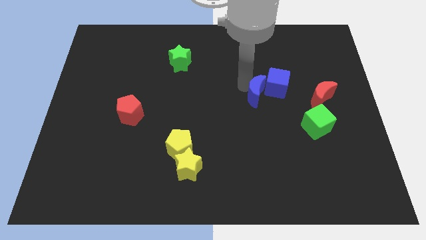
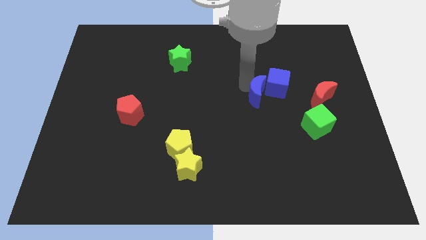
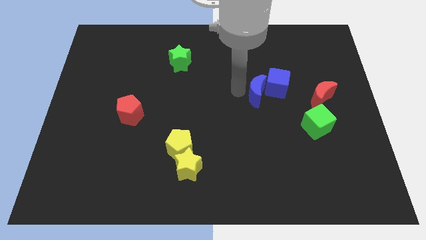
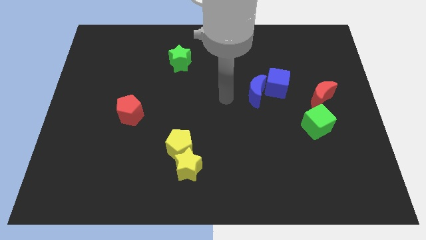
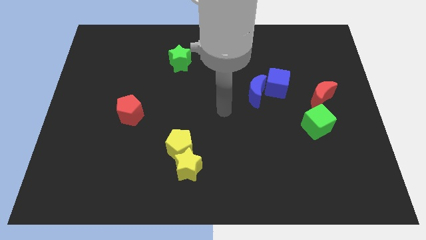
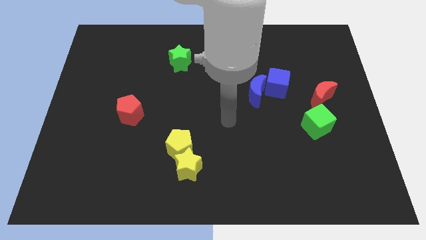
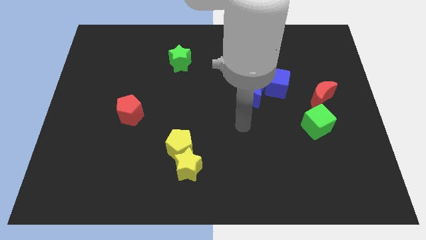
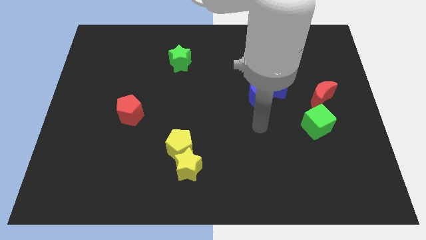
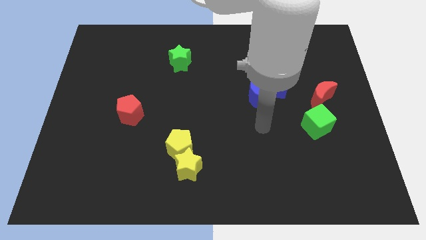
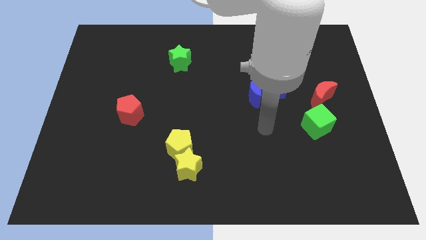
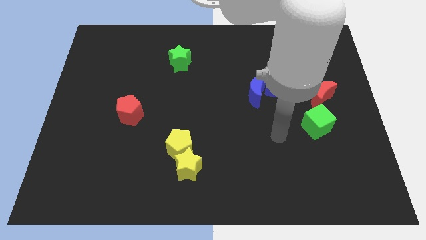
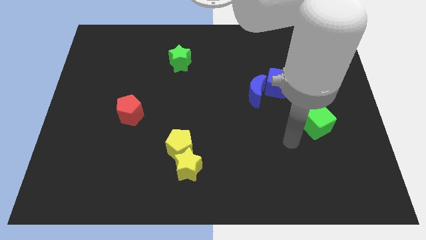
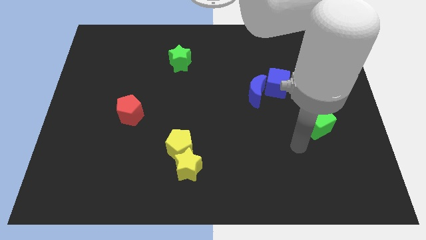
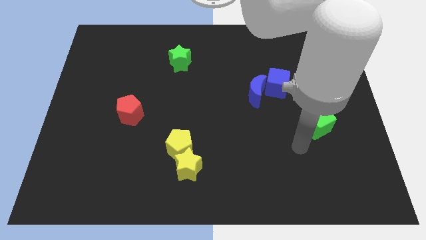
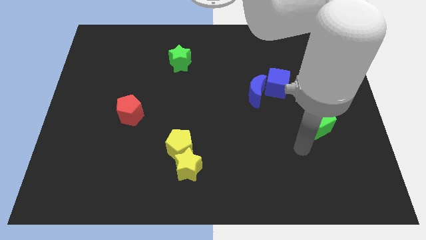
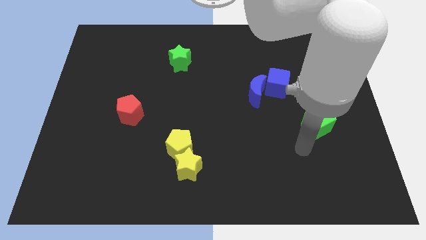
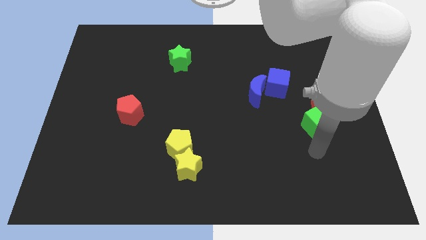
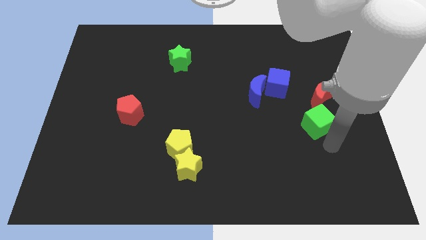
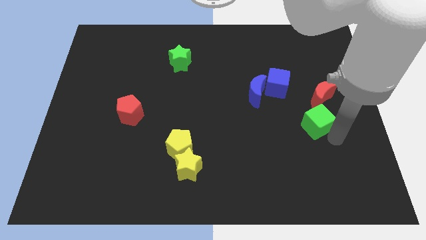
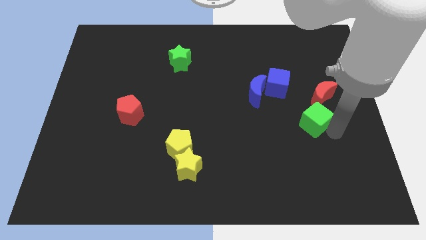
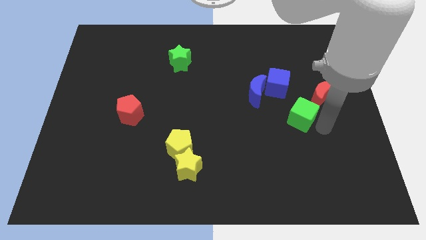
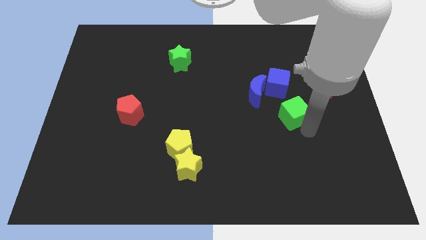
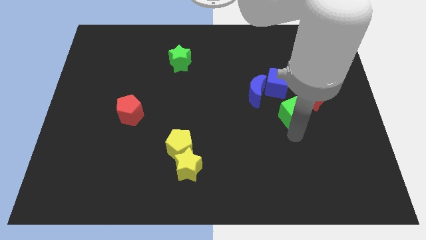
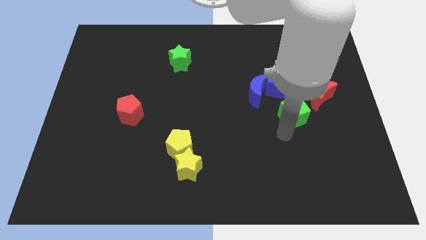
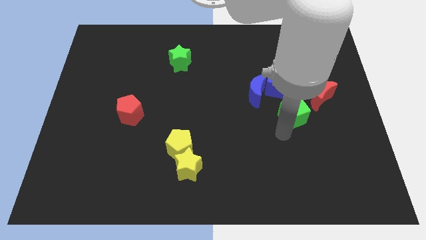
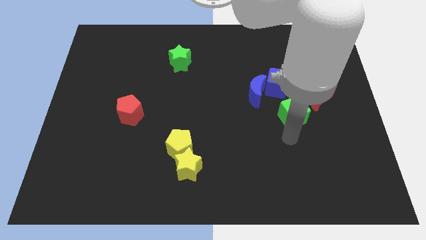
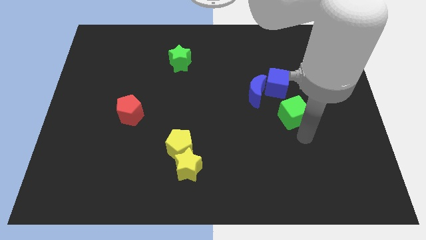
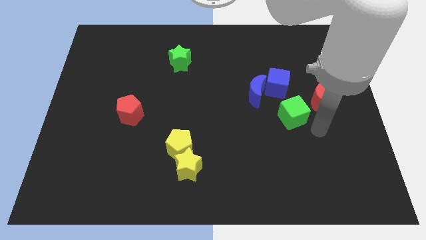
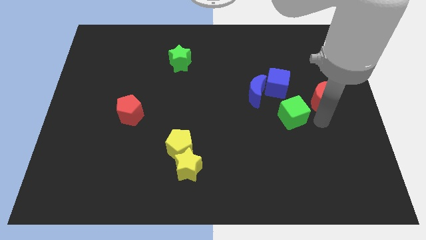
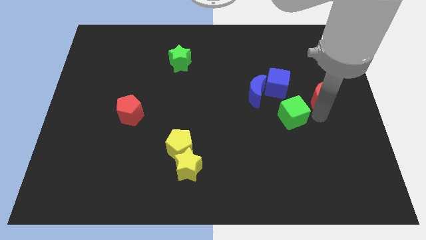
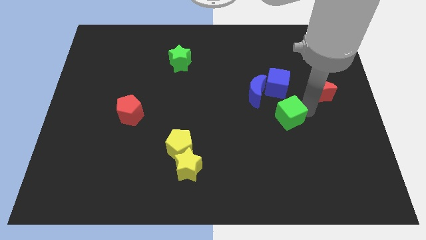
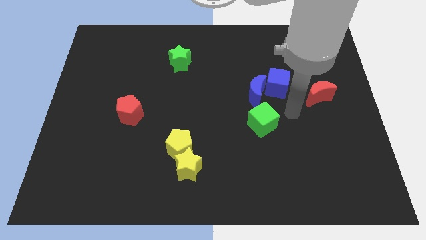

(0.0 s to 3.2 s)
slide your hand away from the blue moon

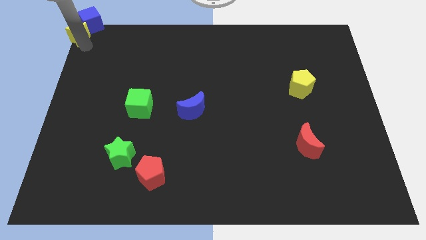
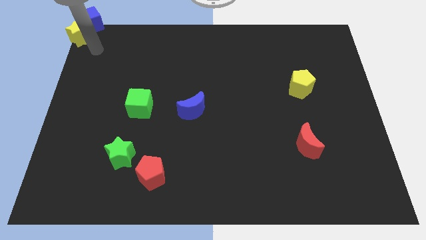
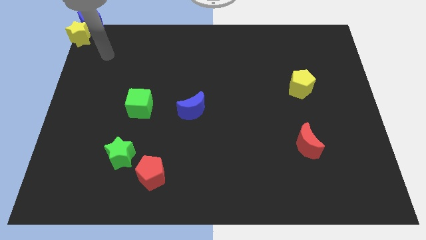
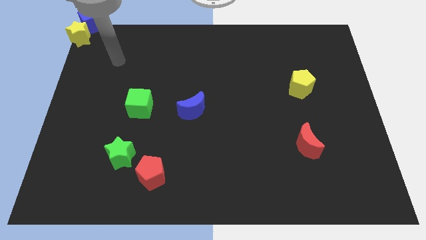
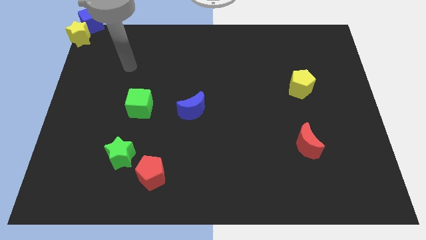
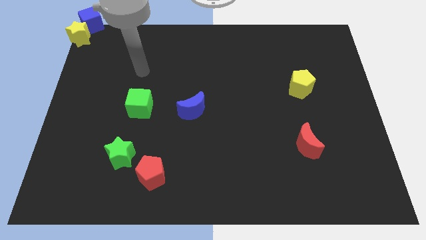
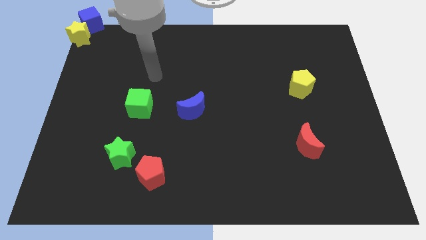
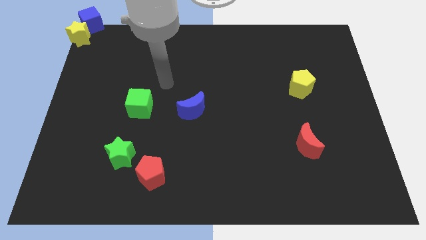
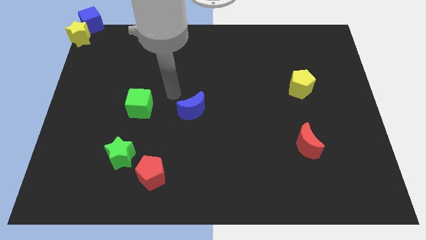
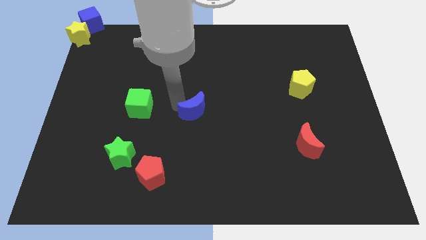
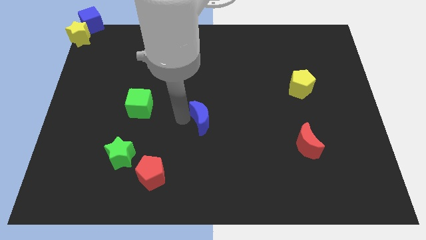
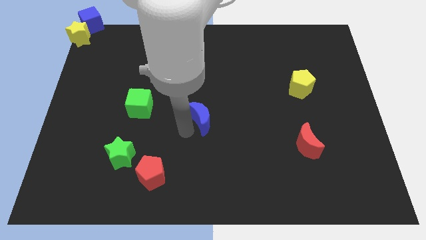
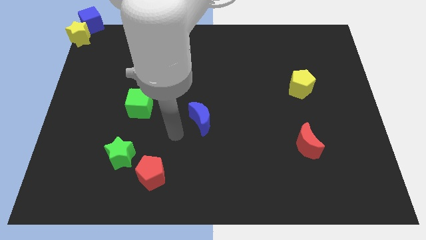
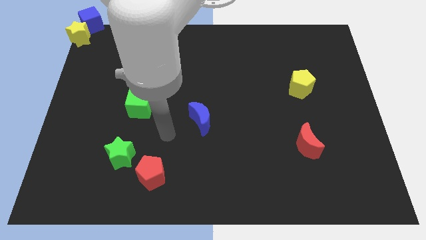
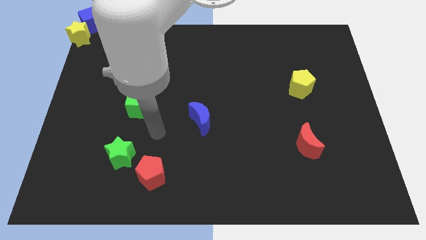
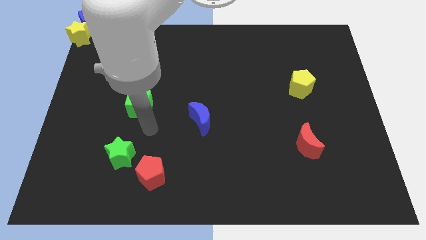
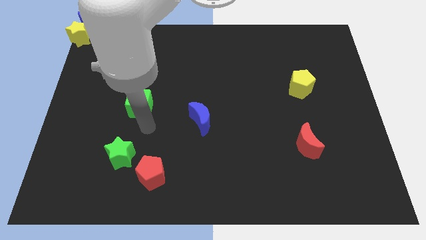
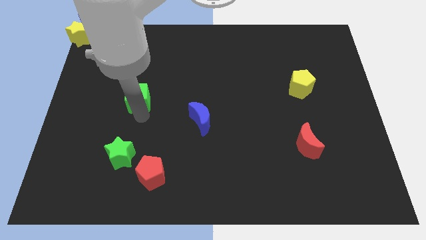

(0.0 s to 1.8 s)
slightly turn the blue moon towards green cube

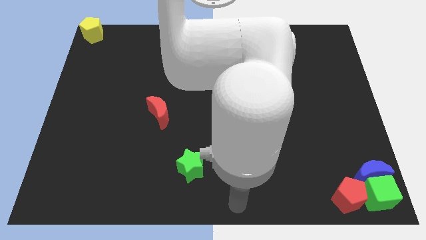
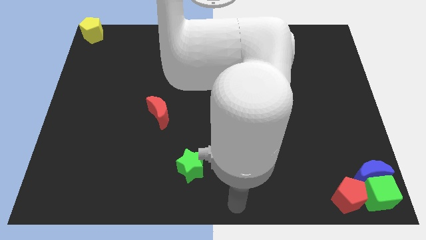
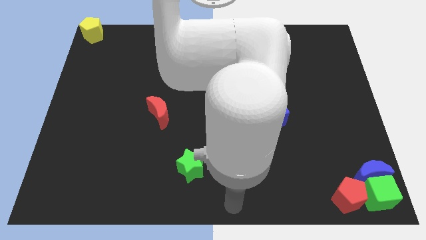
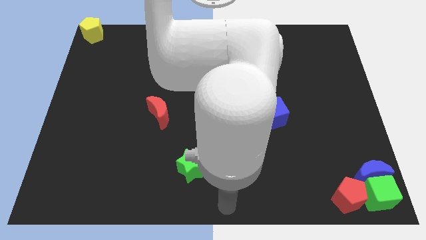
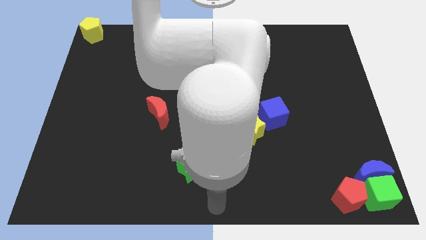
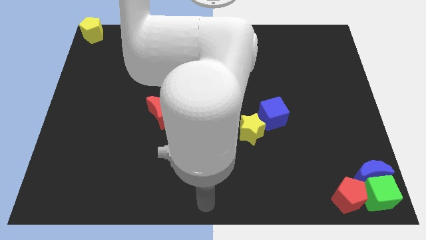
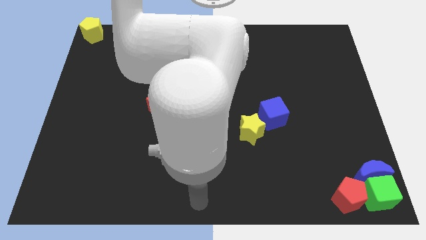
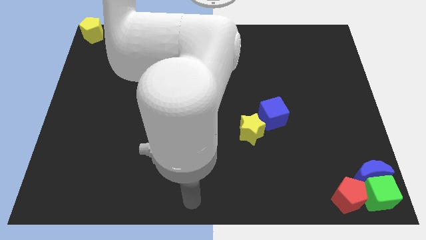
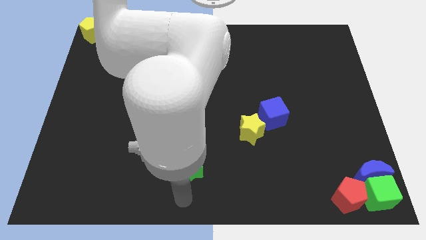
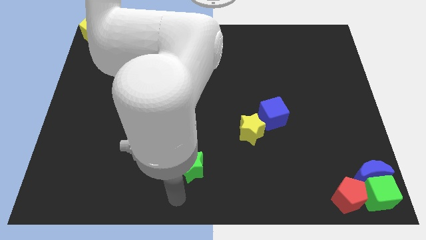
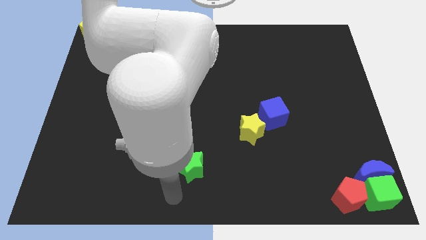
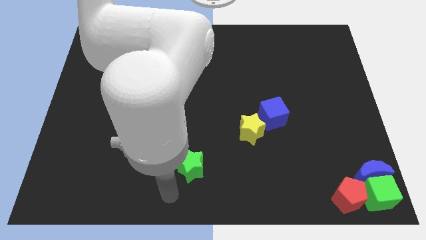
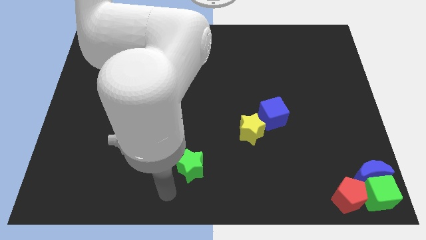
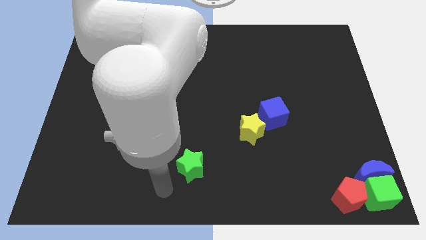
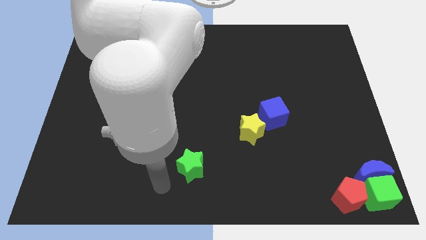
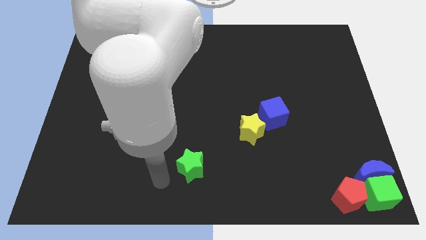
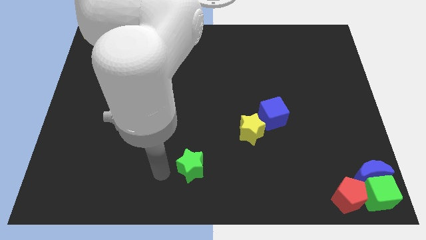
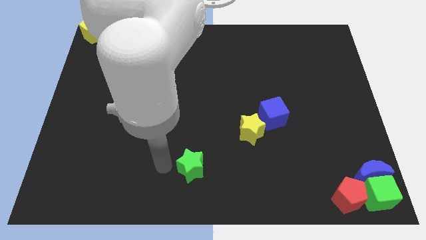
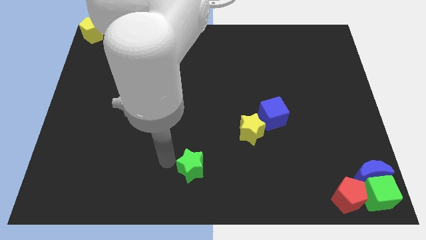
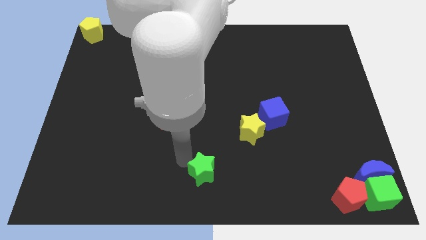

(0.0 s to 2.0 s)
move yourself close to the left side of the green star

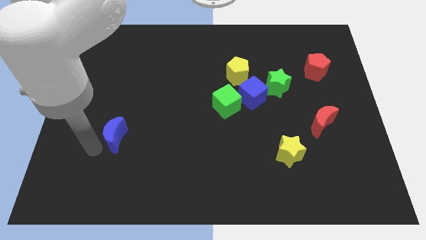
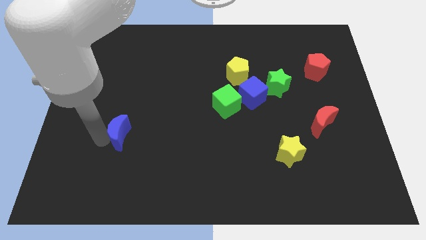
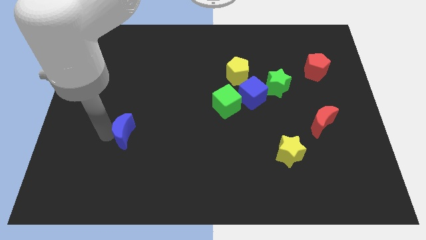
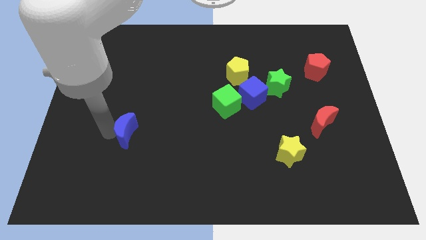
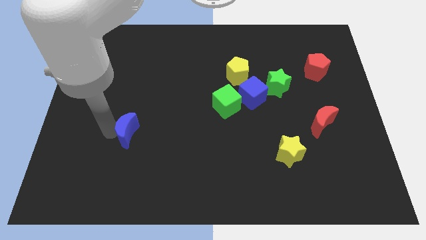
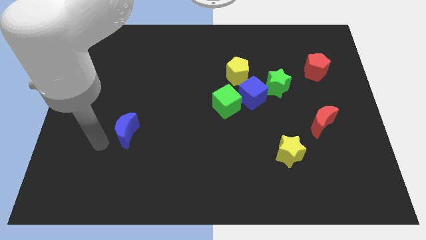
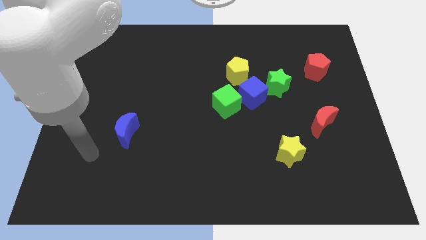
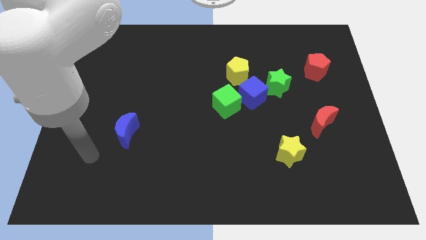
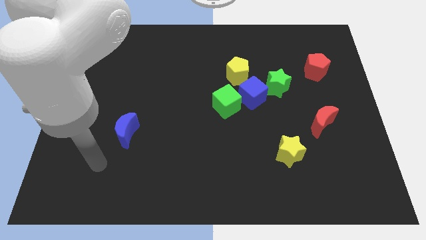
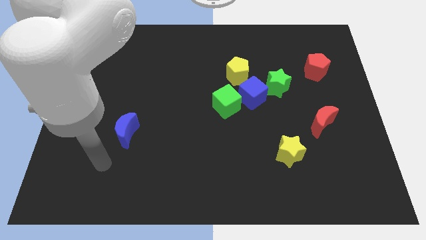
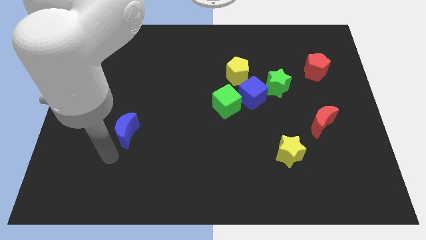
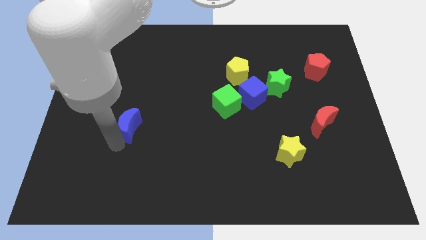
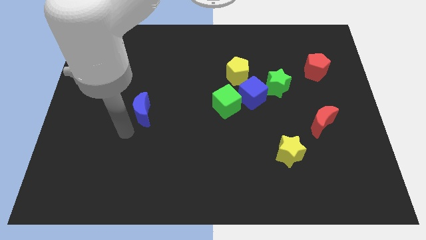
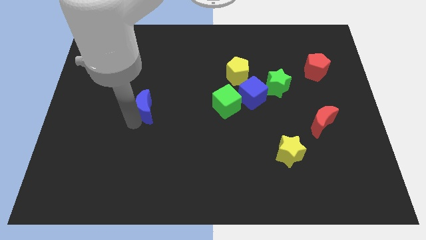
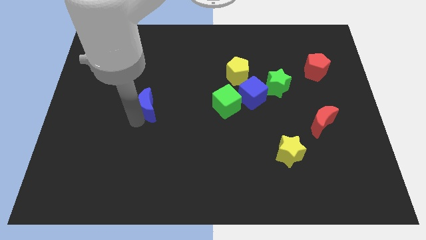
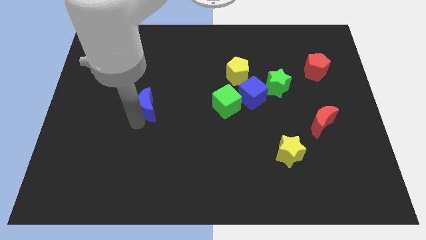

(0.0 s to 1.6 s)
place the blue moon to the left of the green cube

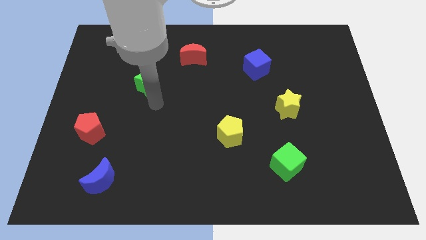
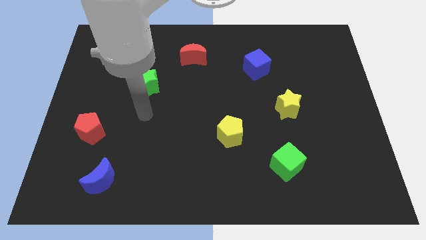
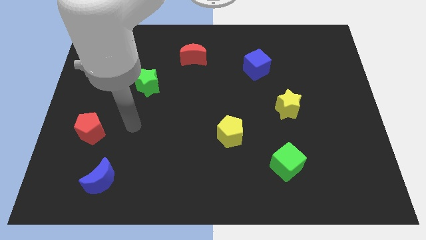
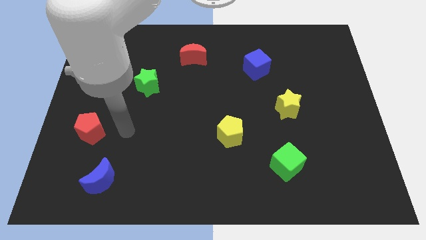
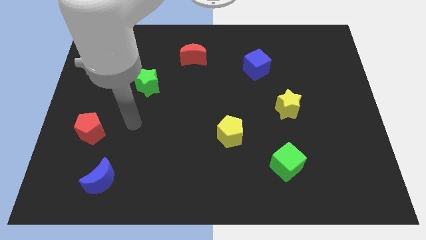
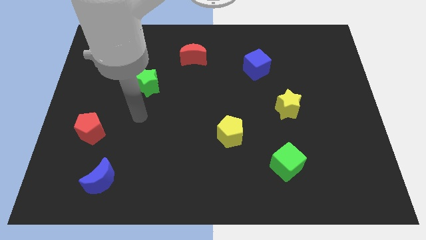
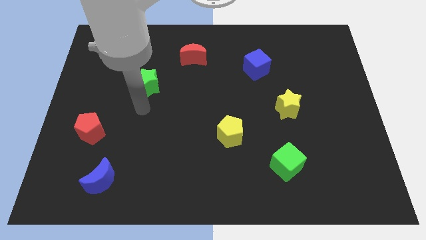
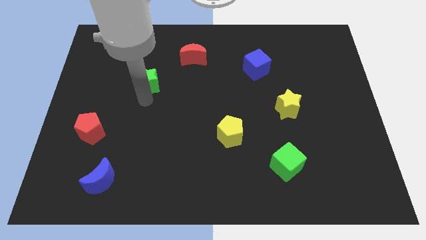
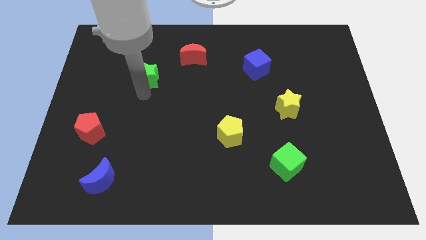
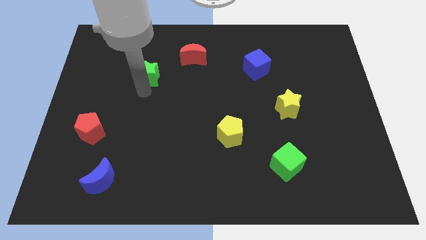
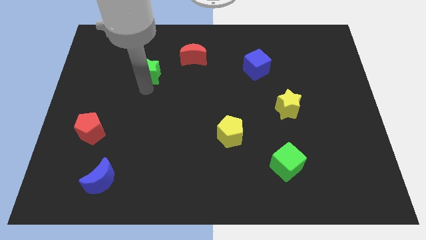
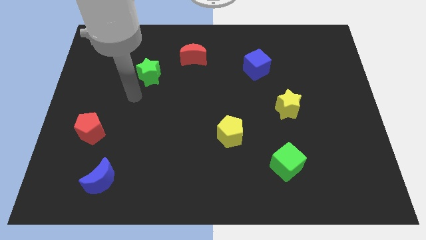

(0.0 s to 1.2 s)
push the green star slightly up
